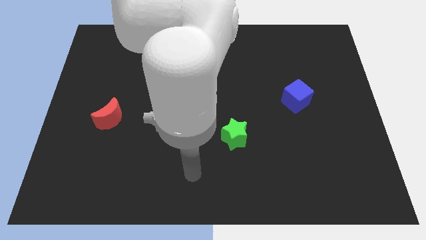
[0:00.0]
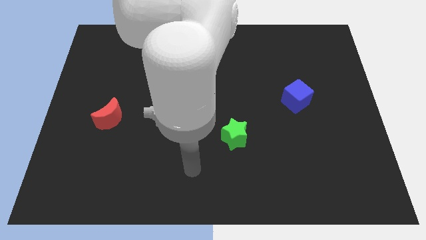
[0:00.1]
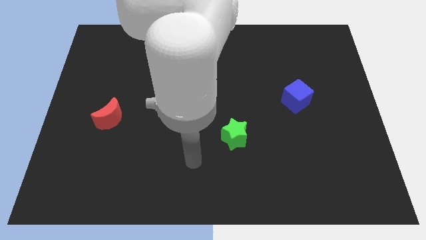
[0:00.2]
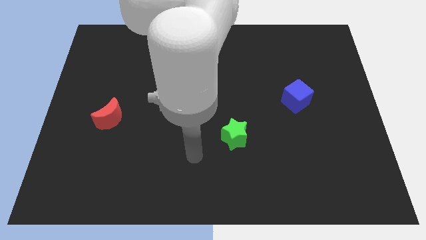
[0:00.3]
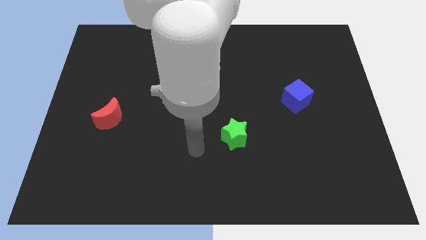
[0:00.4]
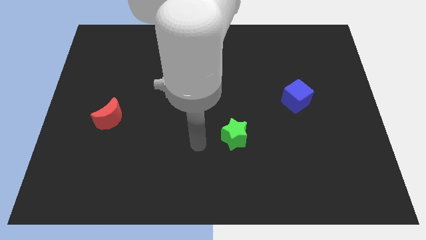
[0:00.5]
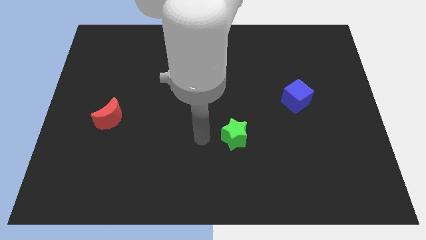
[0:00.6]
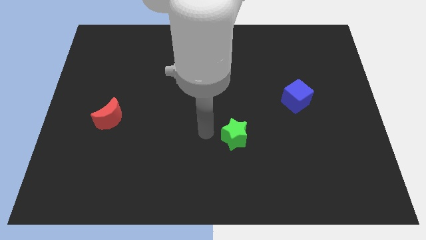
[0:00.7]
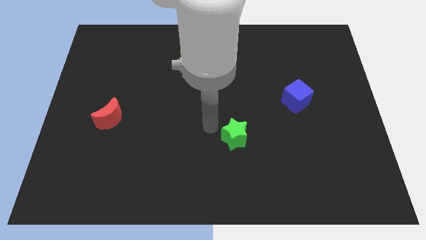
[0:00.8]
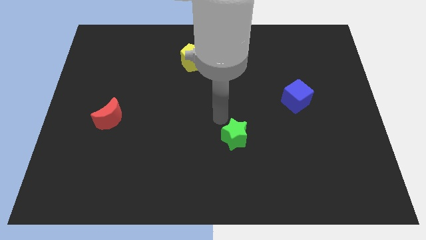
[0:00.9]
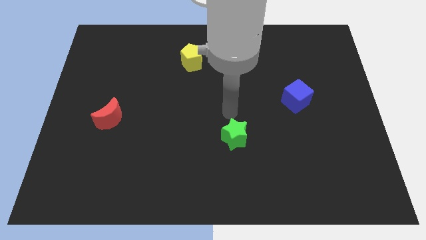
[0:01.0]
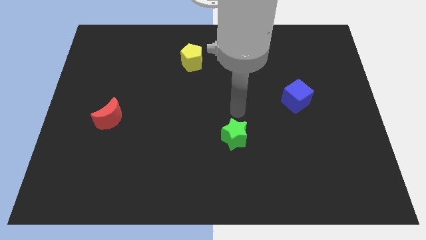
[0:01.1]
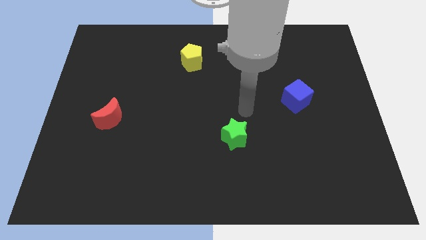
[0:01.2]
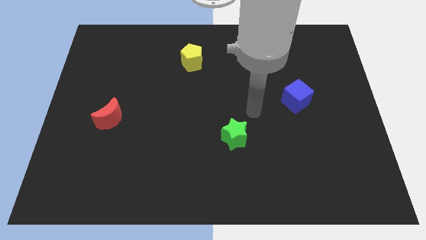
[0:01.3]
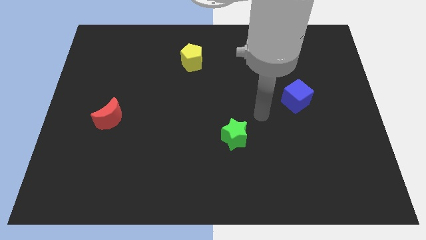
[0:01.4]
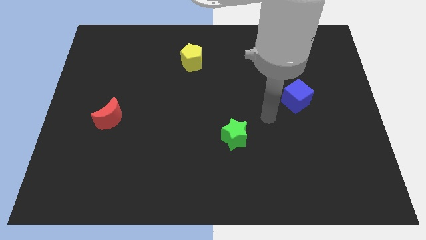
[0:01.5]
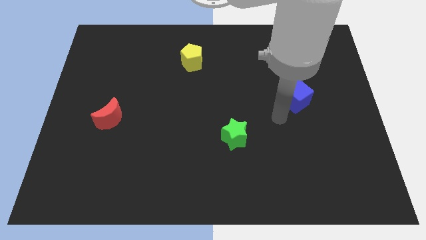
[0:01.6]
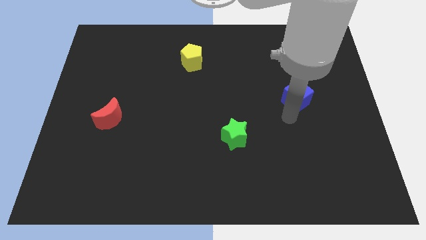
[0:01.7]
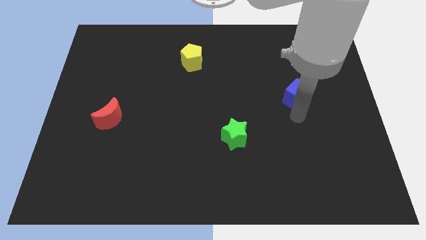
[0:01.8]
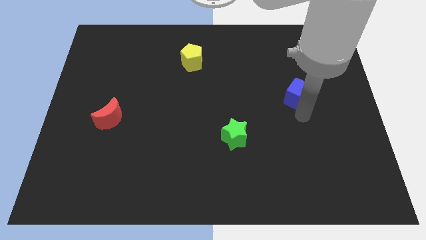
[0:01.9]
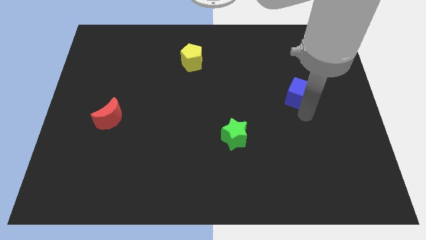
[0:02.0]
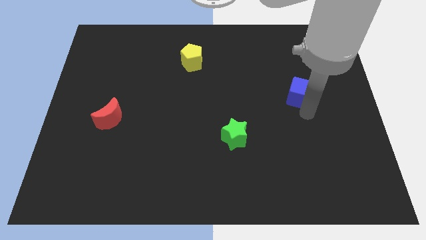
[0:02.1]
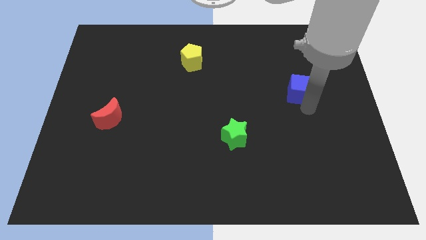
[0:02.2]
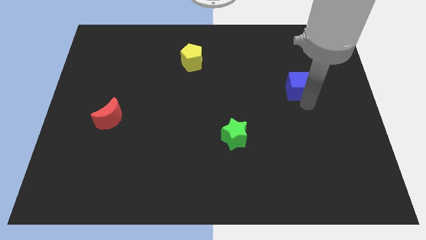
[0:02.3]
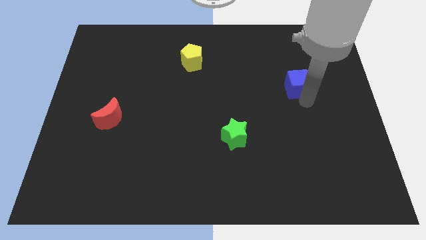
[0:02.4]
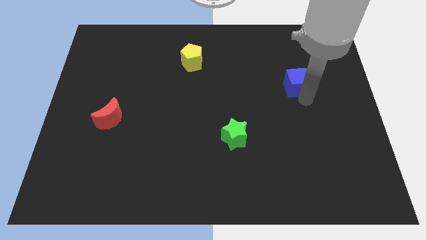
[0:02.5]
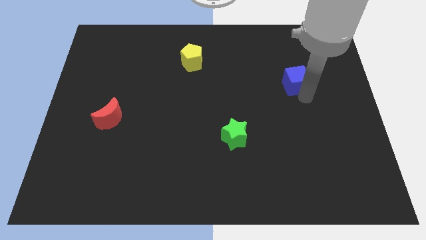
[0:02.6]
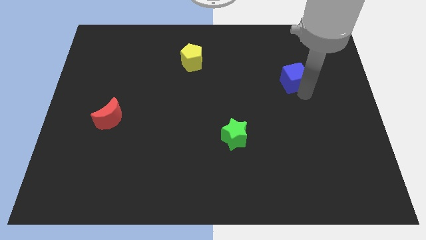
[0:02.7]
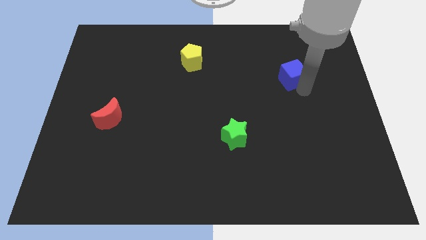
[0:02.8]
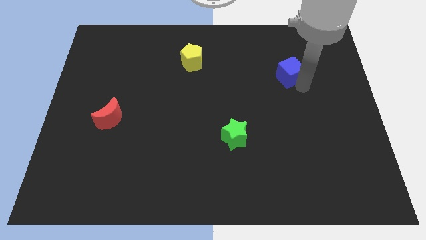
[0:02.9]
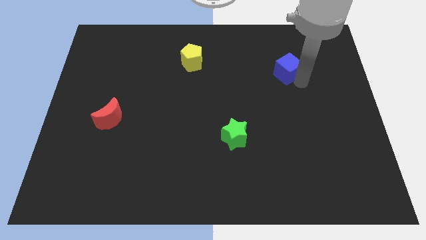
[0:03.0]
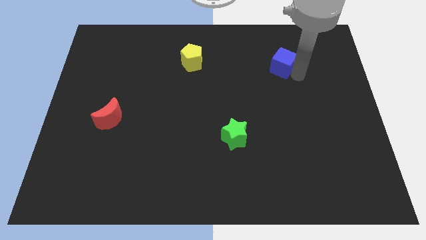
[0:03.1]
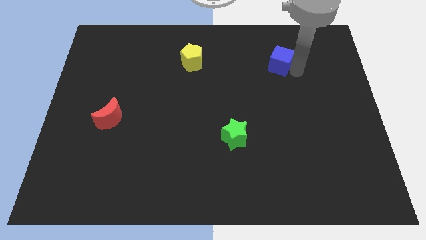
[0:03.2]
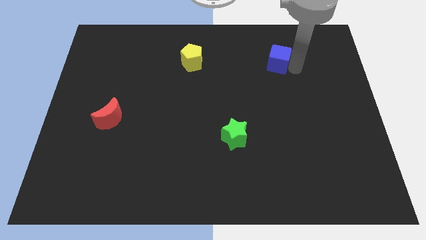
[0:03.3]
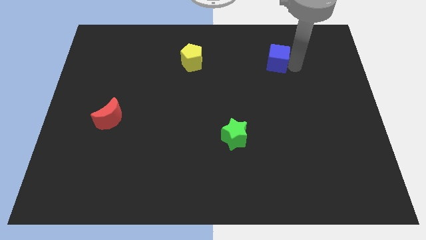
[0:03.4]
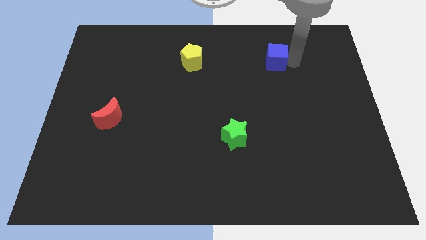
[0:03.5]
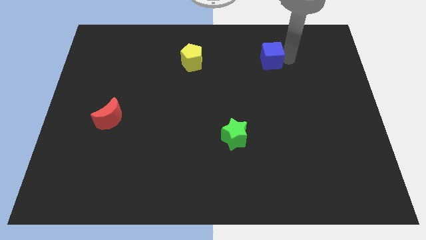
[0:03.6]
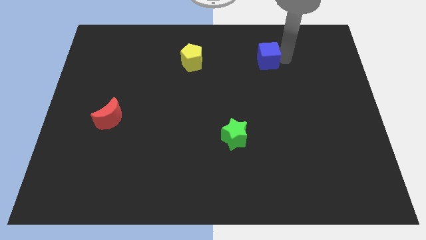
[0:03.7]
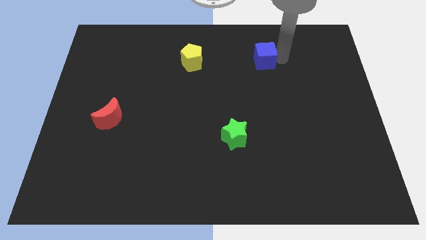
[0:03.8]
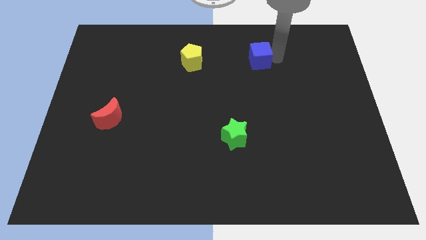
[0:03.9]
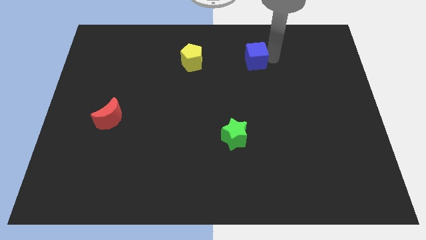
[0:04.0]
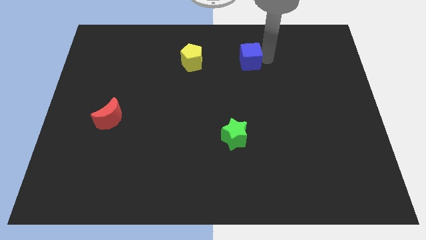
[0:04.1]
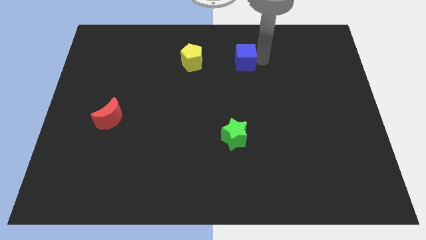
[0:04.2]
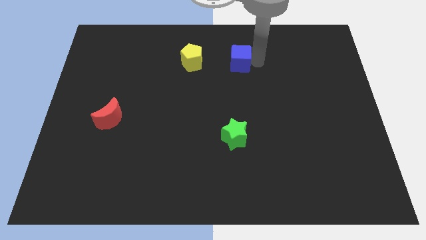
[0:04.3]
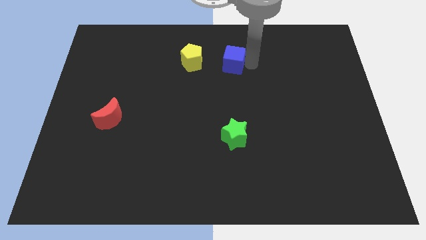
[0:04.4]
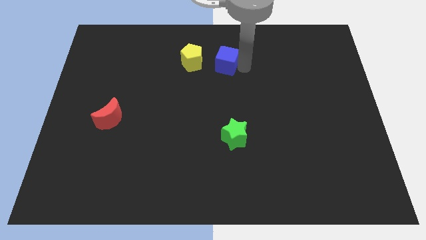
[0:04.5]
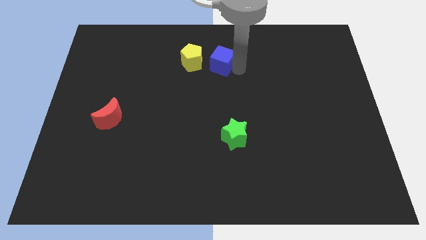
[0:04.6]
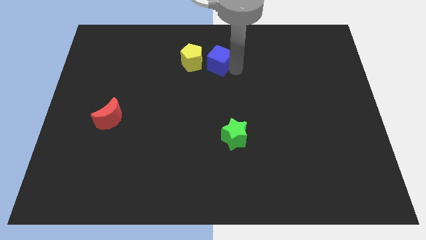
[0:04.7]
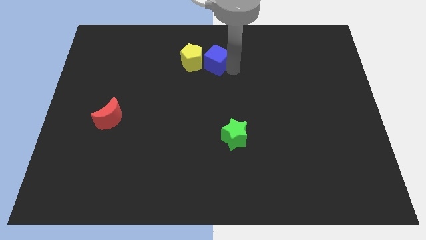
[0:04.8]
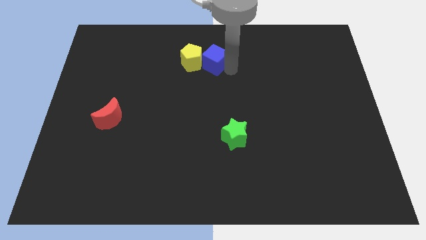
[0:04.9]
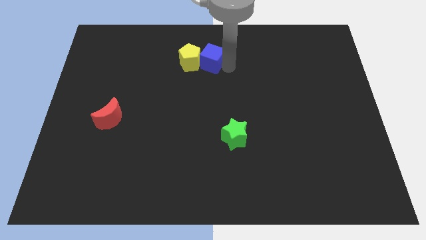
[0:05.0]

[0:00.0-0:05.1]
slide the cube towards the yellow pentagon

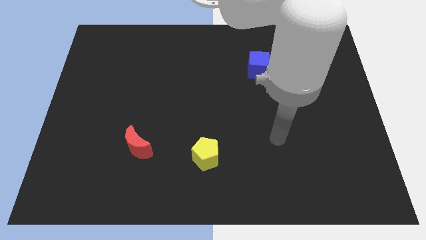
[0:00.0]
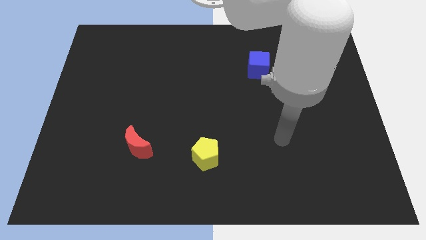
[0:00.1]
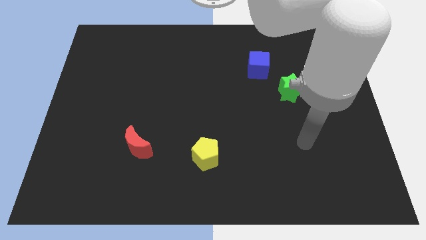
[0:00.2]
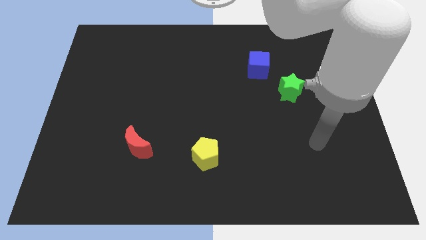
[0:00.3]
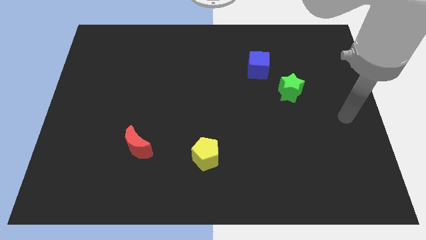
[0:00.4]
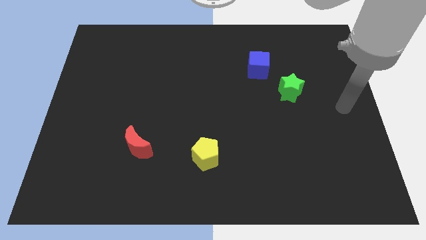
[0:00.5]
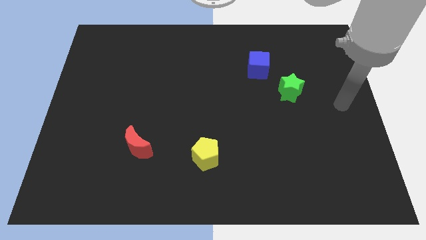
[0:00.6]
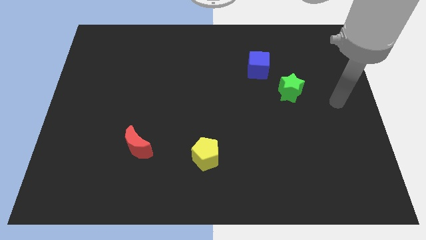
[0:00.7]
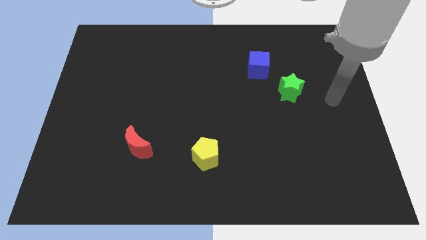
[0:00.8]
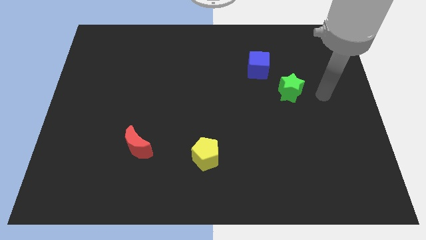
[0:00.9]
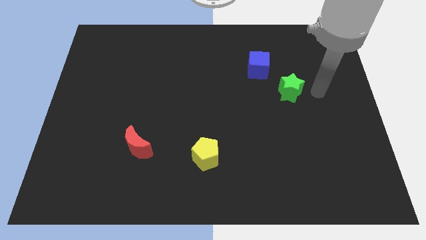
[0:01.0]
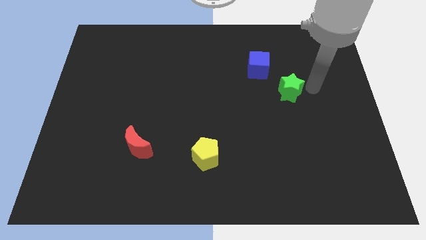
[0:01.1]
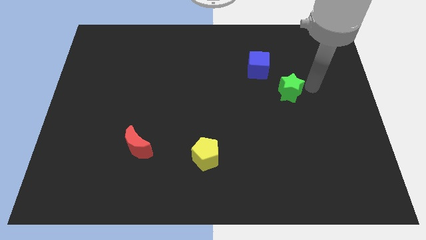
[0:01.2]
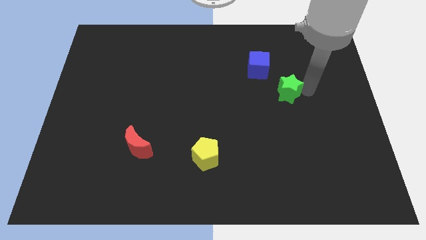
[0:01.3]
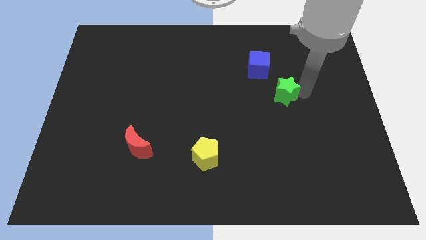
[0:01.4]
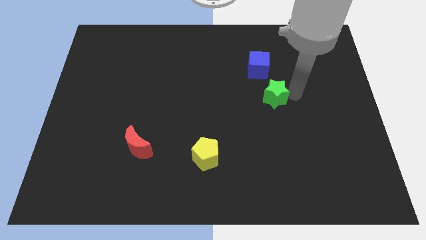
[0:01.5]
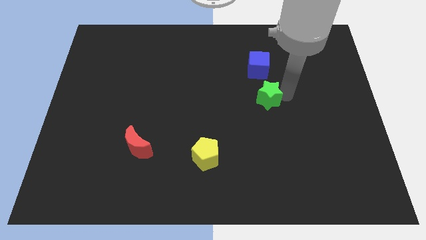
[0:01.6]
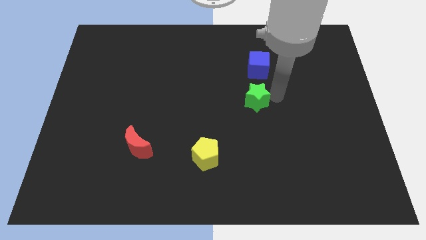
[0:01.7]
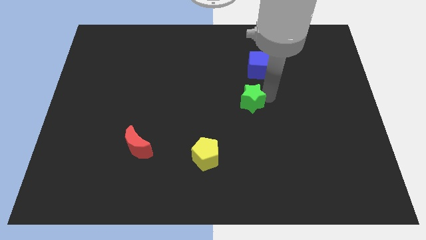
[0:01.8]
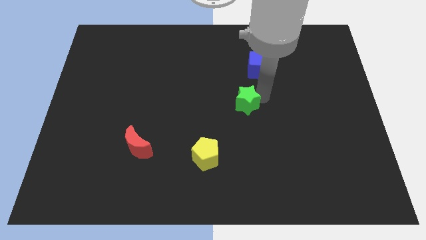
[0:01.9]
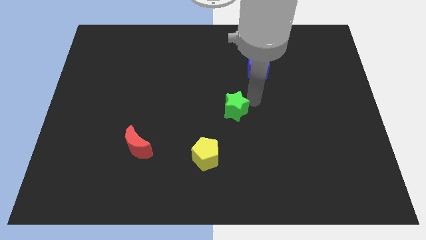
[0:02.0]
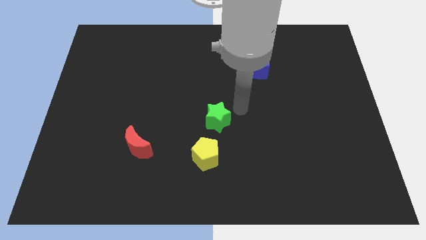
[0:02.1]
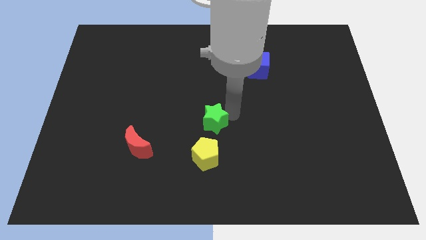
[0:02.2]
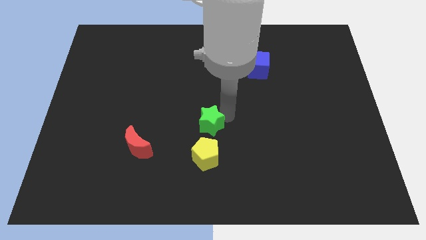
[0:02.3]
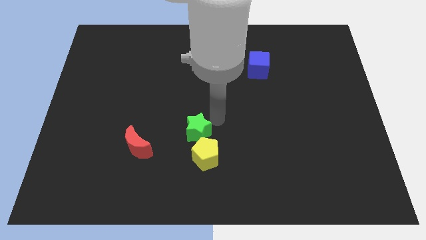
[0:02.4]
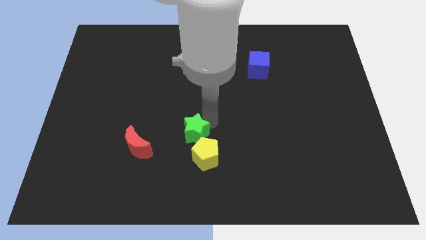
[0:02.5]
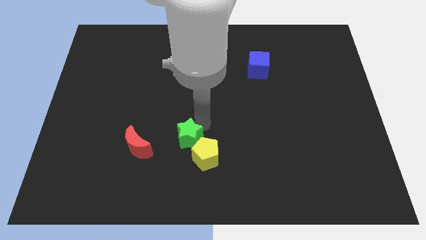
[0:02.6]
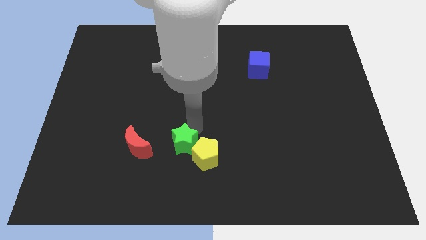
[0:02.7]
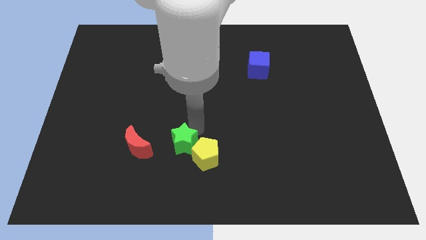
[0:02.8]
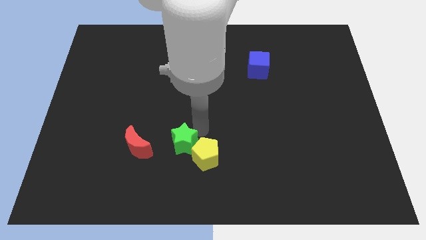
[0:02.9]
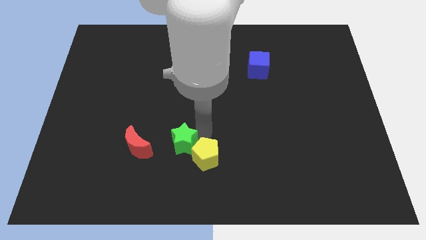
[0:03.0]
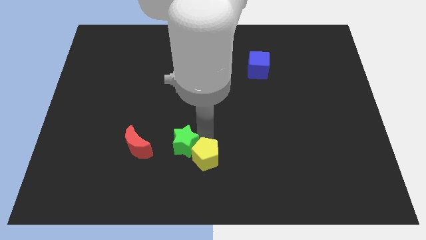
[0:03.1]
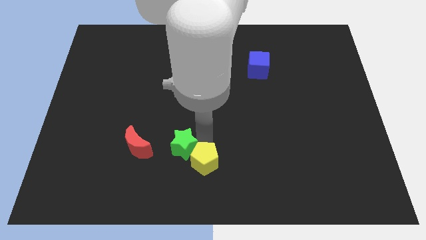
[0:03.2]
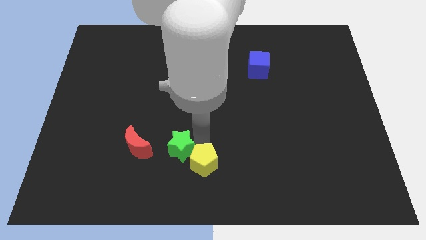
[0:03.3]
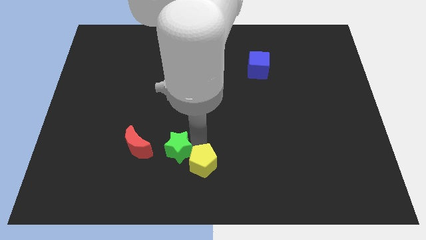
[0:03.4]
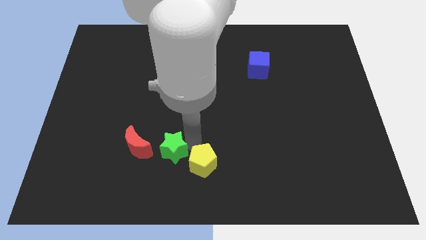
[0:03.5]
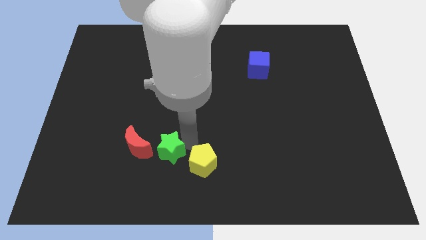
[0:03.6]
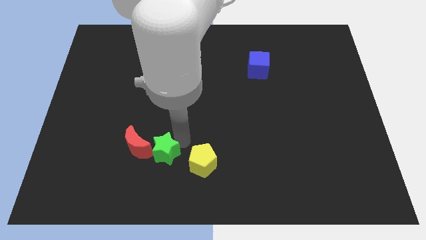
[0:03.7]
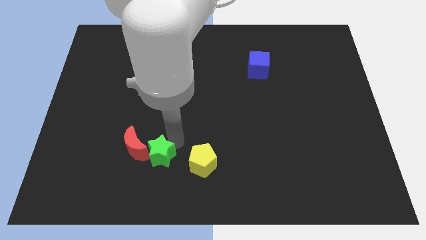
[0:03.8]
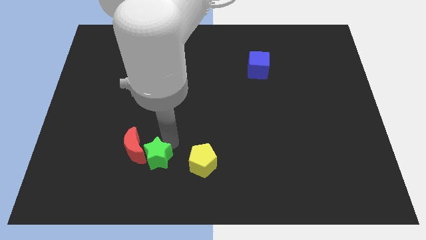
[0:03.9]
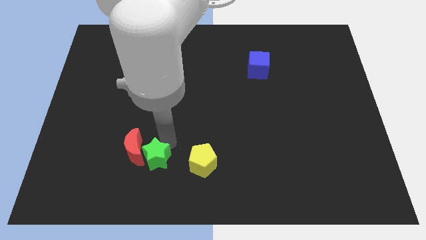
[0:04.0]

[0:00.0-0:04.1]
move the green star close to the moon
